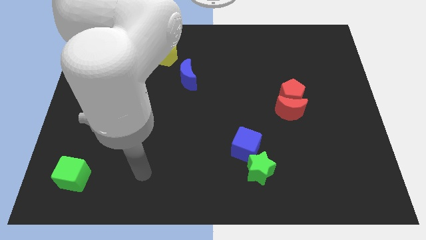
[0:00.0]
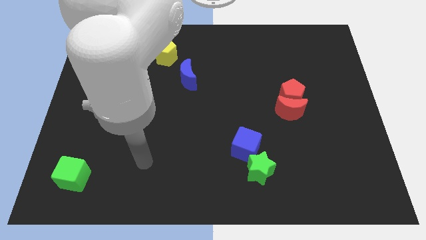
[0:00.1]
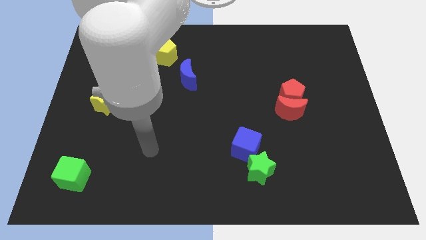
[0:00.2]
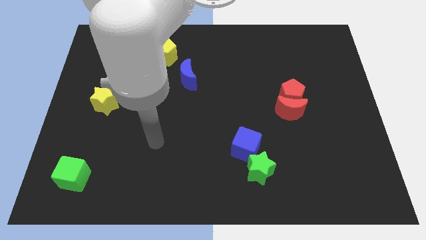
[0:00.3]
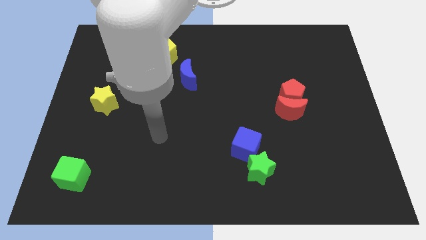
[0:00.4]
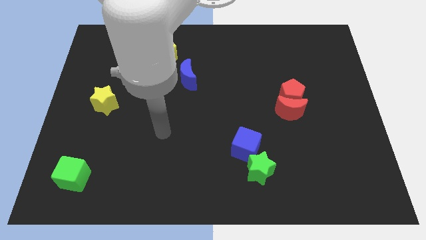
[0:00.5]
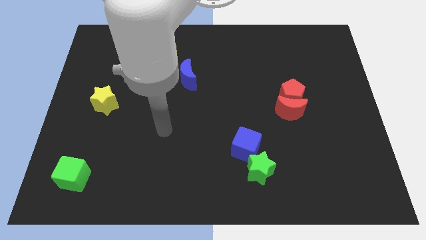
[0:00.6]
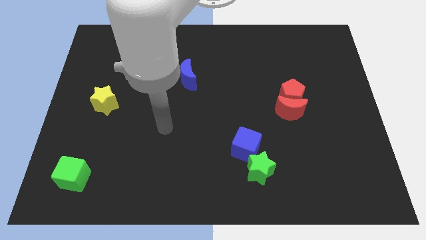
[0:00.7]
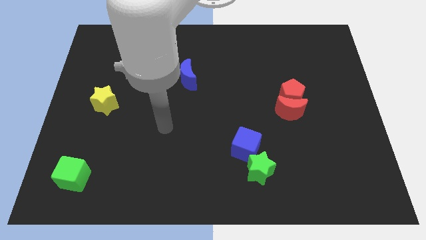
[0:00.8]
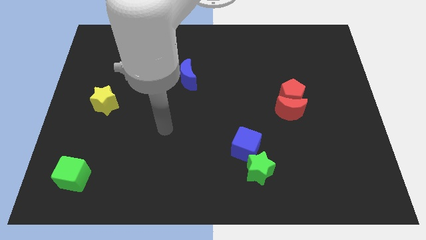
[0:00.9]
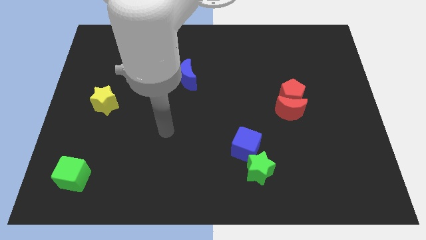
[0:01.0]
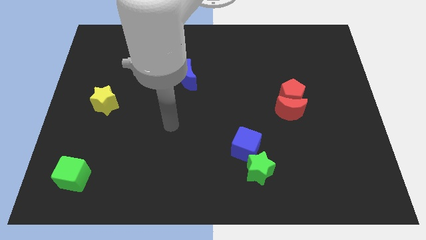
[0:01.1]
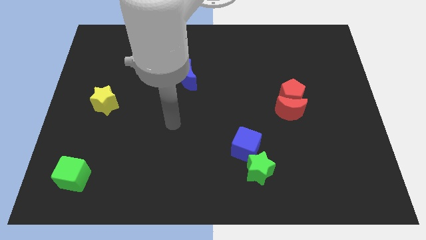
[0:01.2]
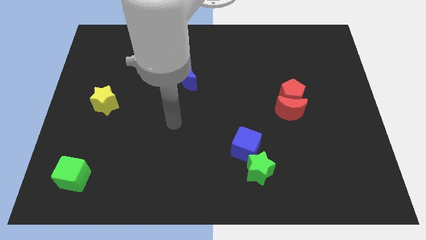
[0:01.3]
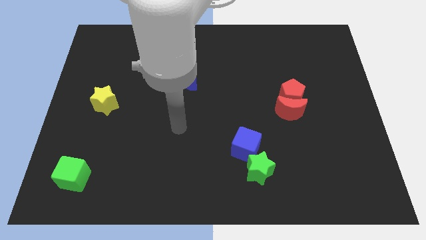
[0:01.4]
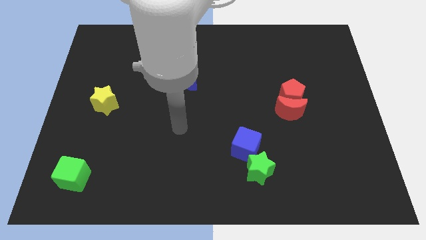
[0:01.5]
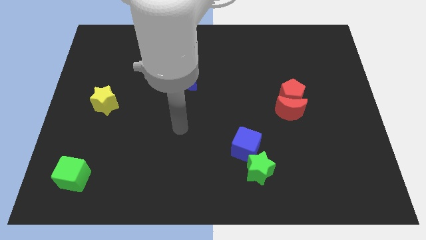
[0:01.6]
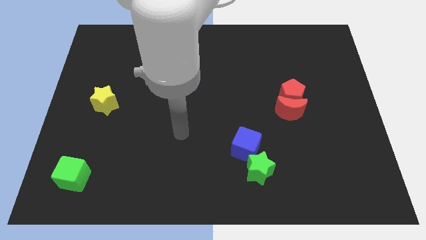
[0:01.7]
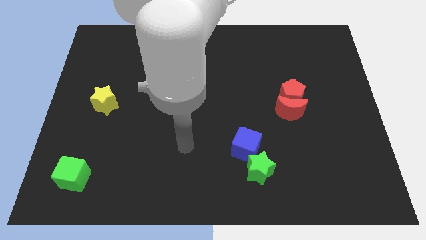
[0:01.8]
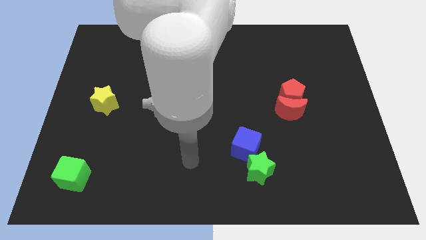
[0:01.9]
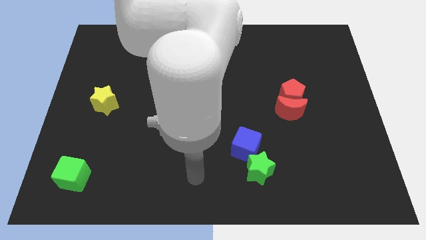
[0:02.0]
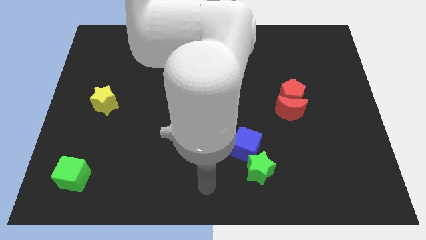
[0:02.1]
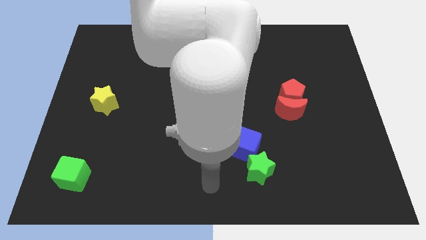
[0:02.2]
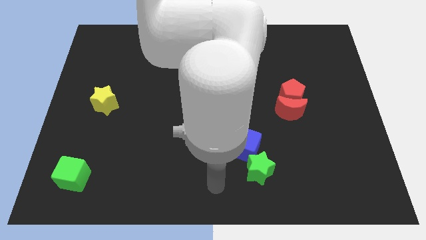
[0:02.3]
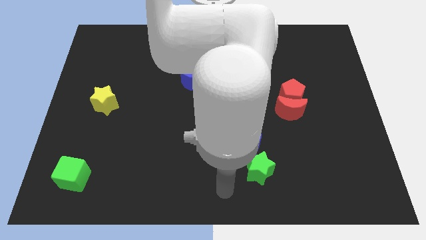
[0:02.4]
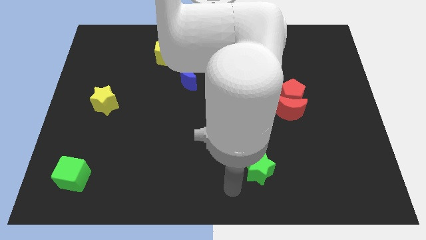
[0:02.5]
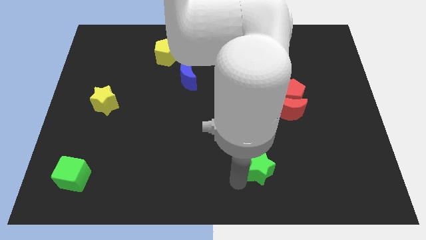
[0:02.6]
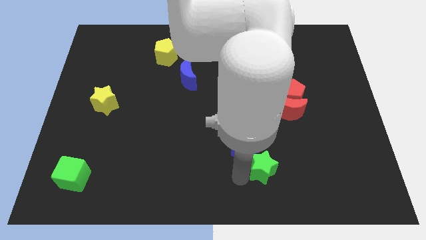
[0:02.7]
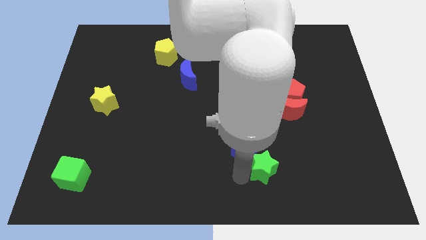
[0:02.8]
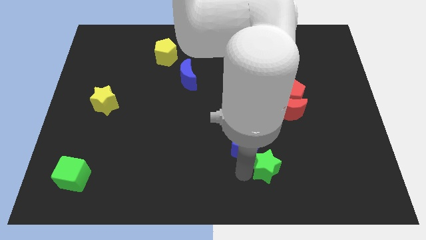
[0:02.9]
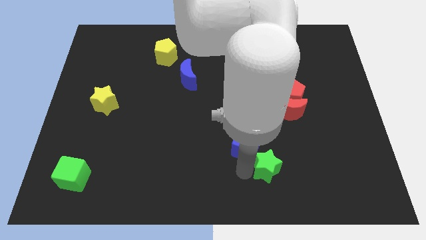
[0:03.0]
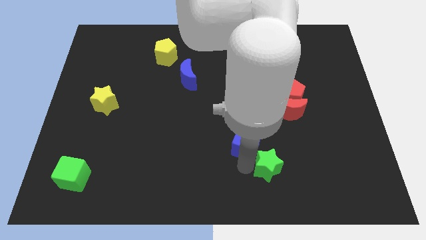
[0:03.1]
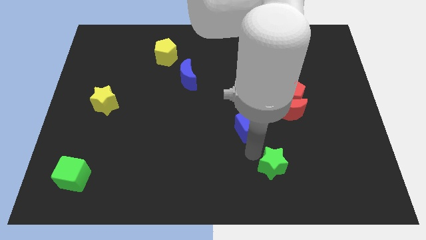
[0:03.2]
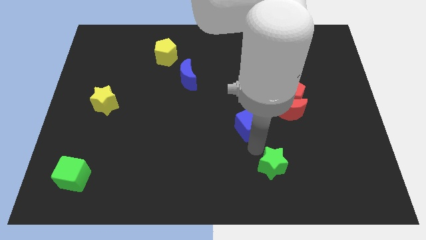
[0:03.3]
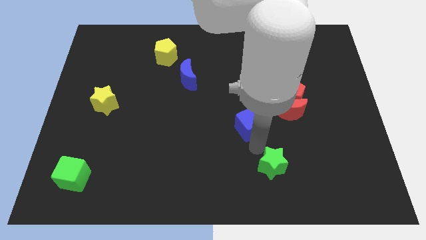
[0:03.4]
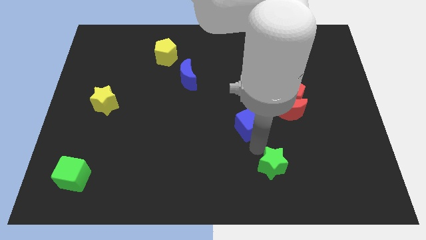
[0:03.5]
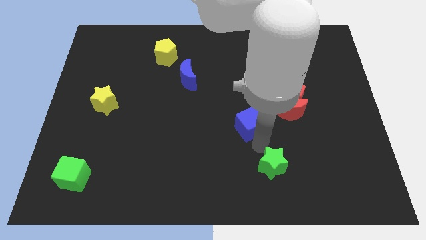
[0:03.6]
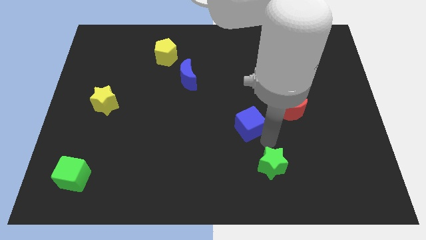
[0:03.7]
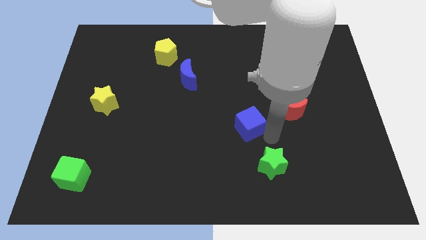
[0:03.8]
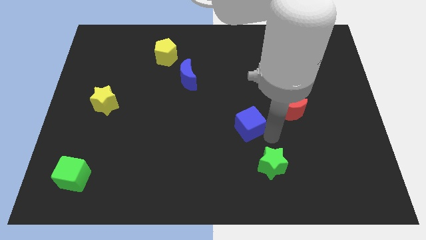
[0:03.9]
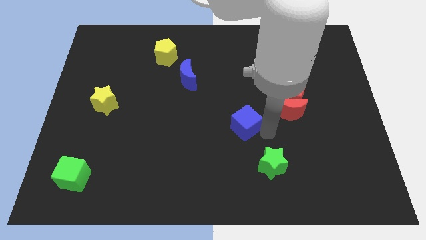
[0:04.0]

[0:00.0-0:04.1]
separate both the blue cube and green star

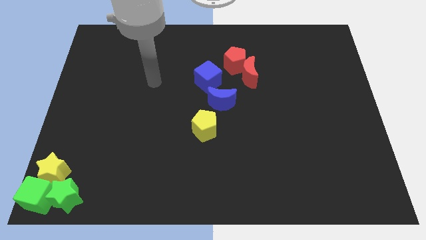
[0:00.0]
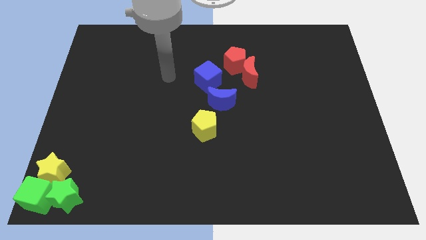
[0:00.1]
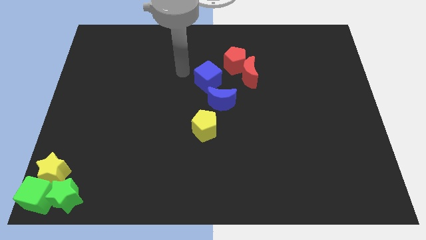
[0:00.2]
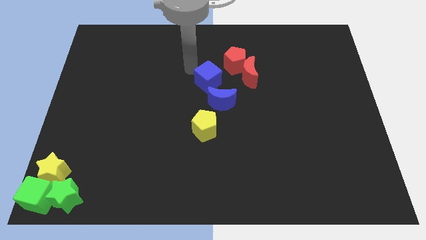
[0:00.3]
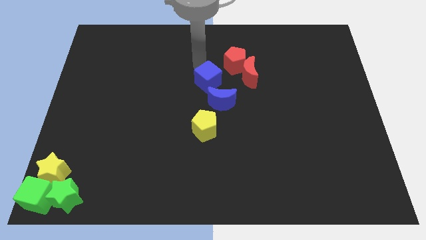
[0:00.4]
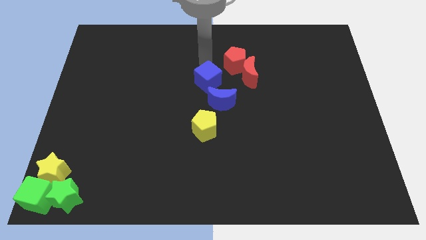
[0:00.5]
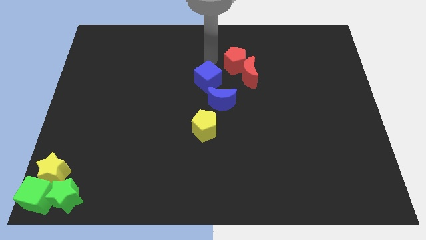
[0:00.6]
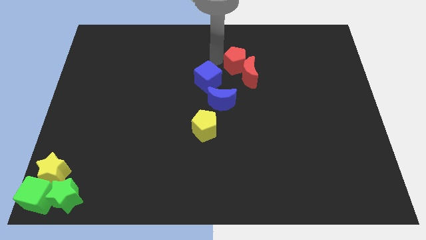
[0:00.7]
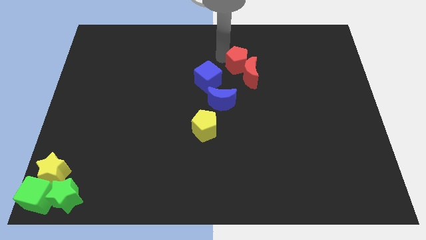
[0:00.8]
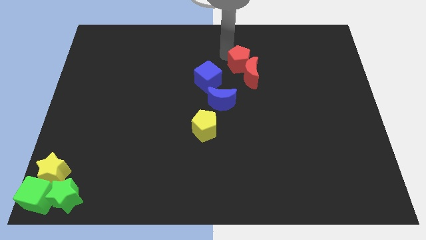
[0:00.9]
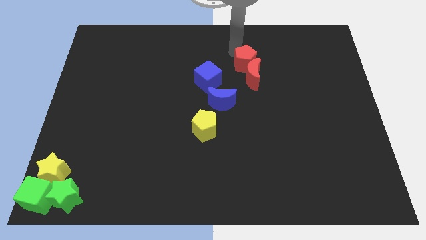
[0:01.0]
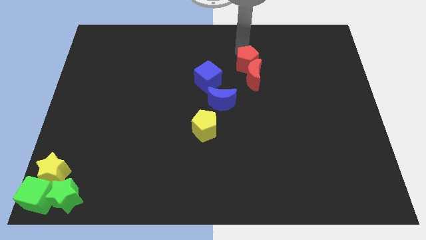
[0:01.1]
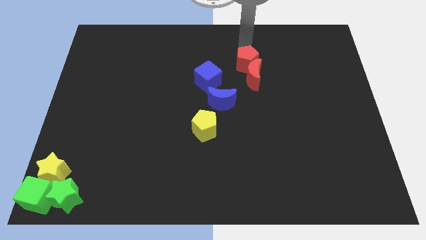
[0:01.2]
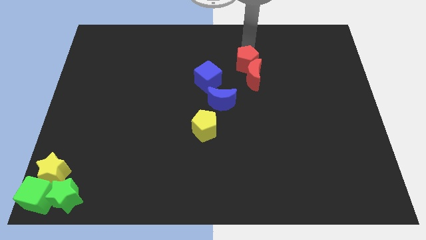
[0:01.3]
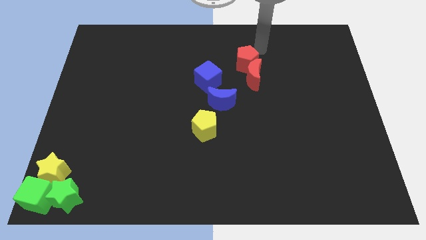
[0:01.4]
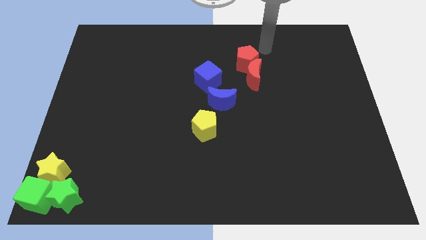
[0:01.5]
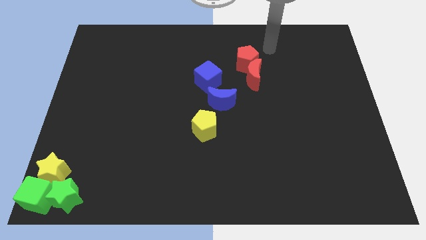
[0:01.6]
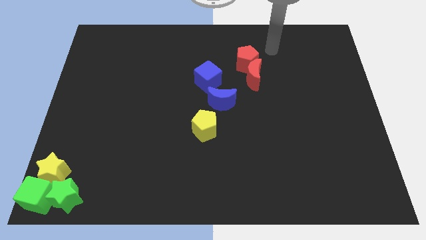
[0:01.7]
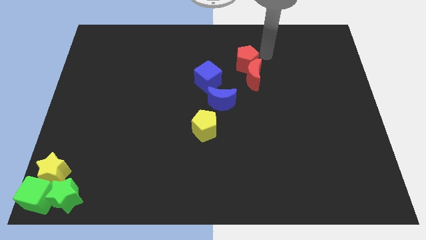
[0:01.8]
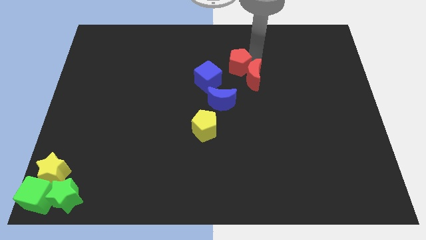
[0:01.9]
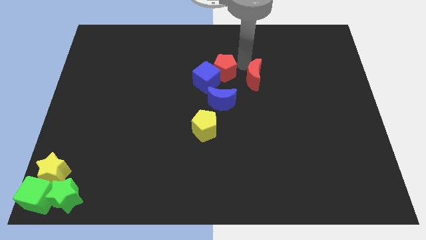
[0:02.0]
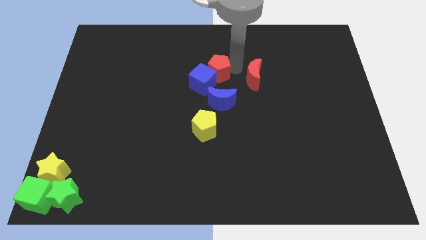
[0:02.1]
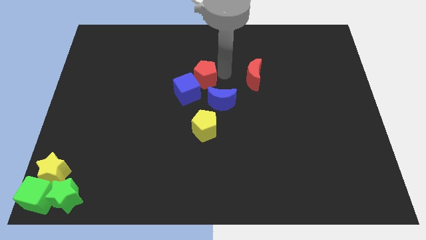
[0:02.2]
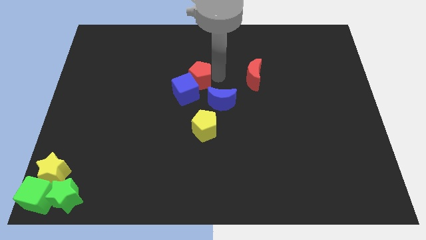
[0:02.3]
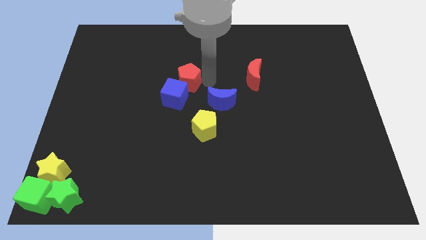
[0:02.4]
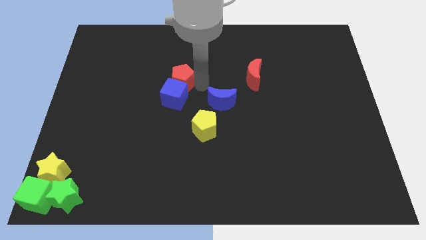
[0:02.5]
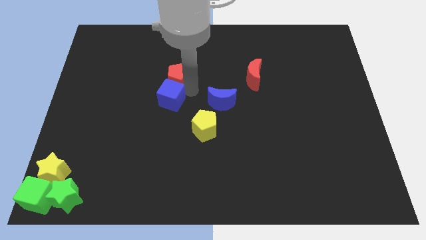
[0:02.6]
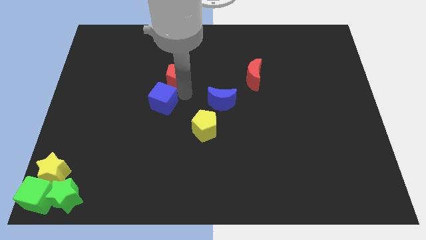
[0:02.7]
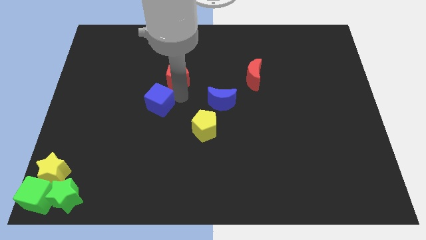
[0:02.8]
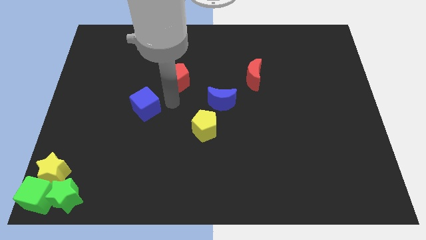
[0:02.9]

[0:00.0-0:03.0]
separate the red pentagon from the red moon

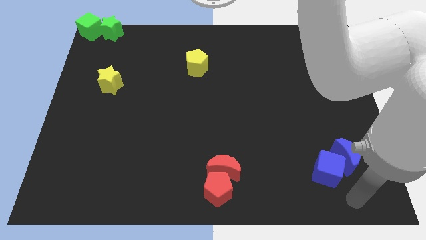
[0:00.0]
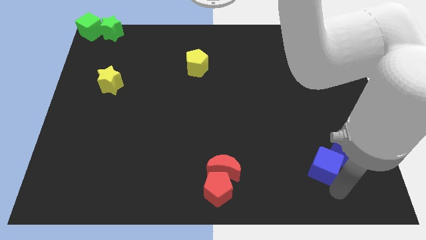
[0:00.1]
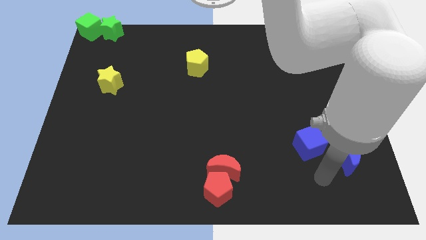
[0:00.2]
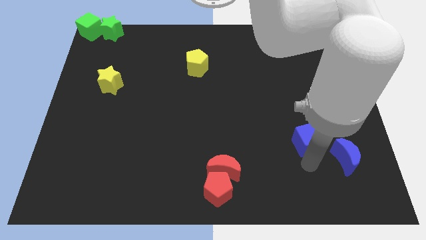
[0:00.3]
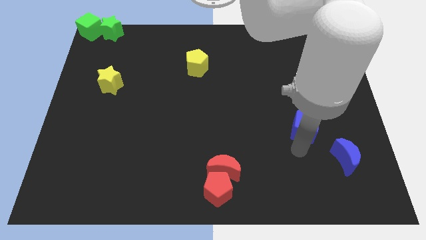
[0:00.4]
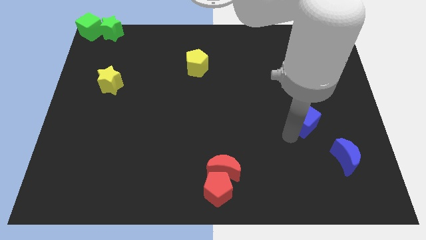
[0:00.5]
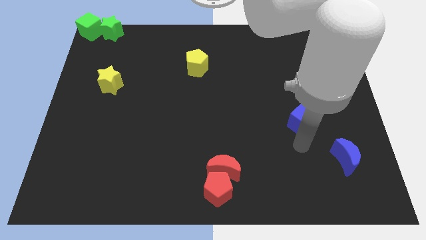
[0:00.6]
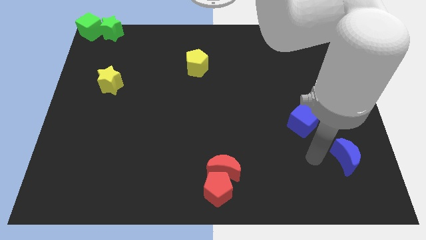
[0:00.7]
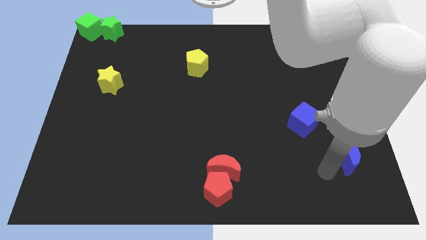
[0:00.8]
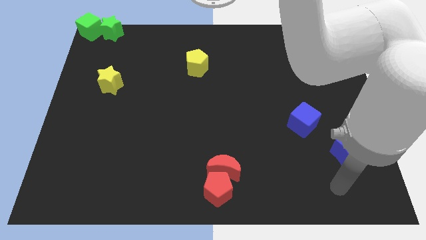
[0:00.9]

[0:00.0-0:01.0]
push blue cube slightly towards up

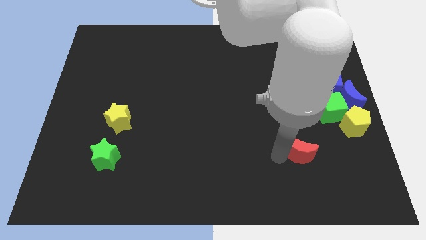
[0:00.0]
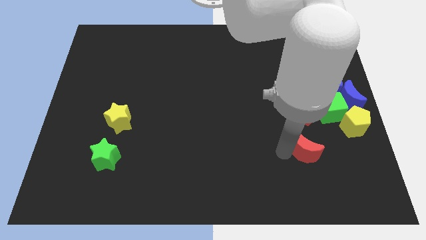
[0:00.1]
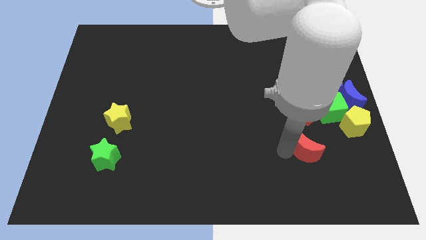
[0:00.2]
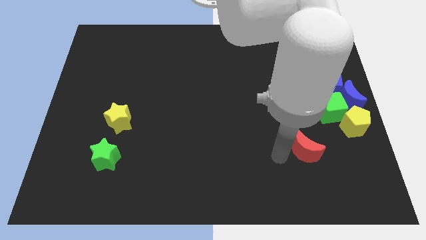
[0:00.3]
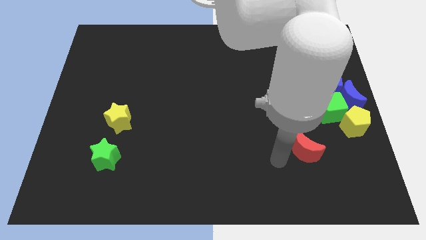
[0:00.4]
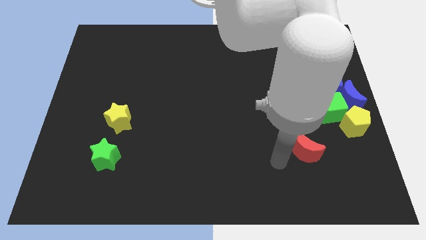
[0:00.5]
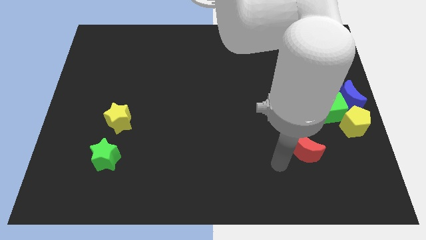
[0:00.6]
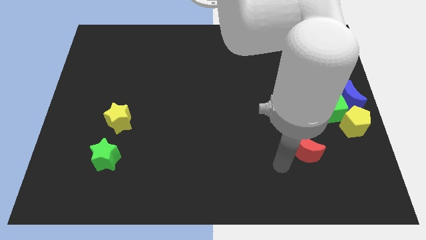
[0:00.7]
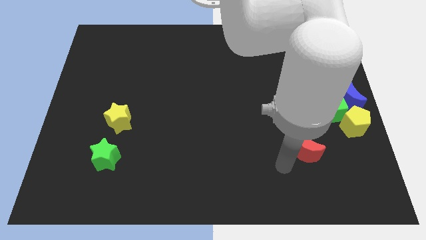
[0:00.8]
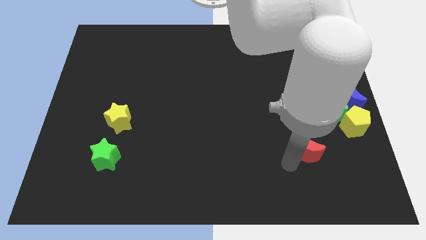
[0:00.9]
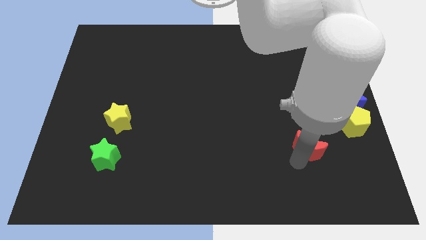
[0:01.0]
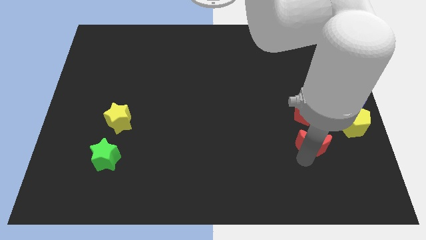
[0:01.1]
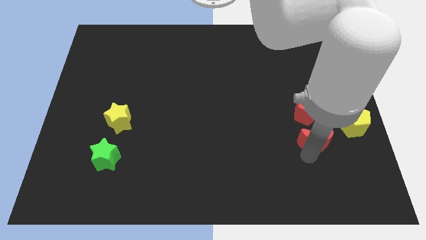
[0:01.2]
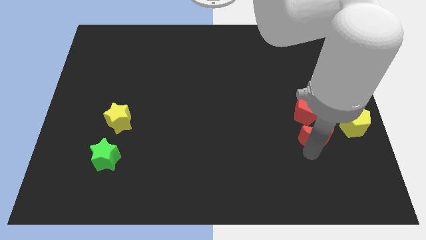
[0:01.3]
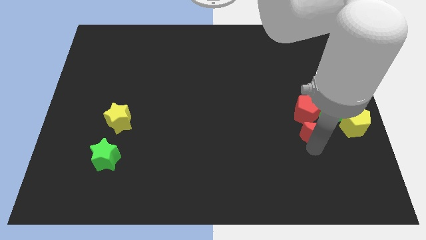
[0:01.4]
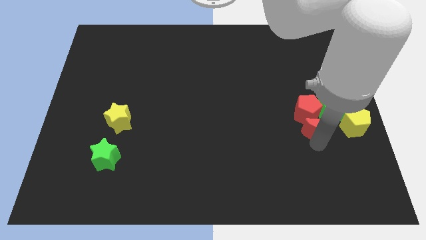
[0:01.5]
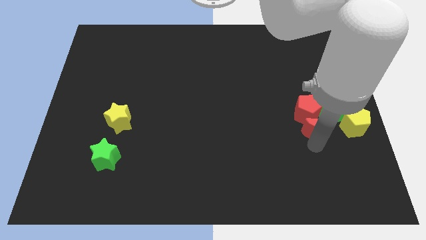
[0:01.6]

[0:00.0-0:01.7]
place the red crescent below the red pentagon
